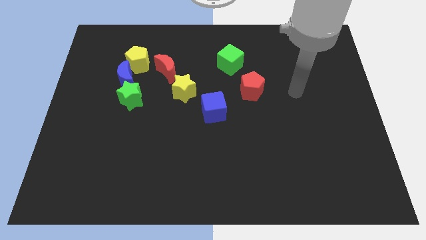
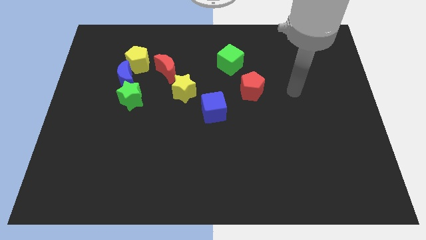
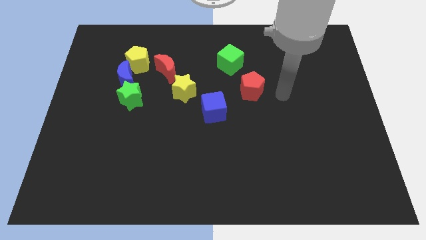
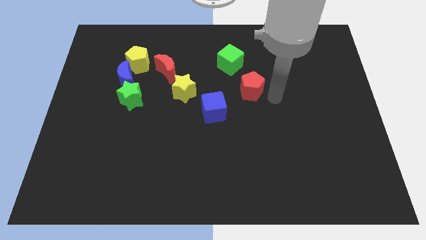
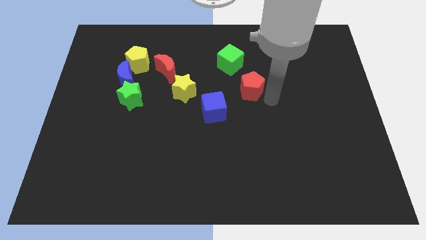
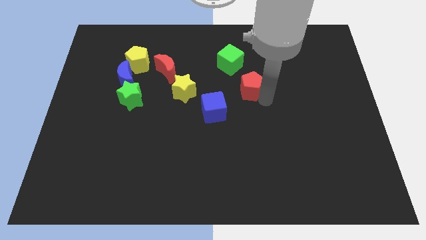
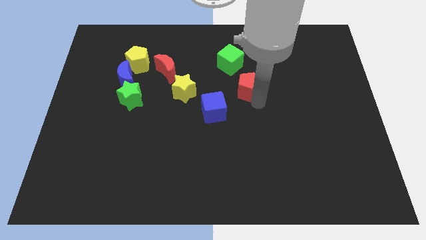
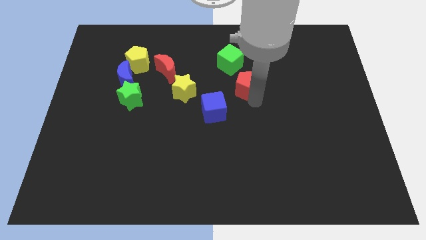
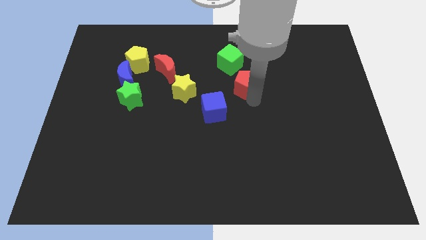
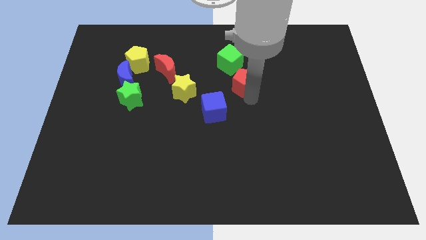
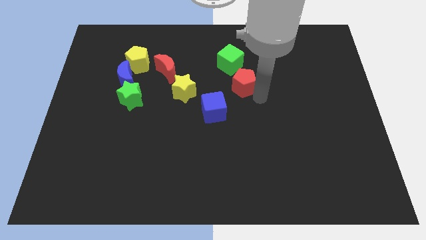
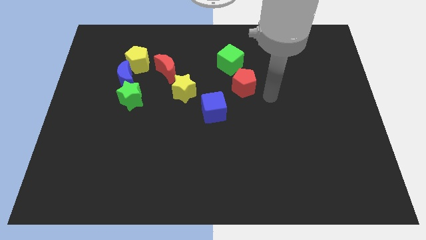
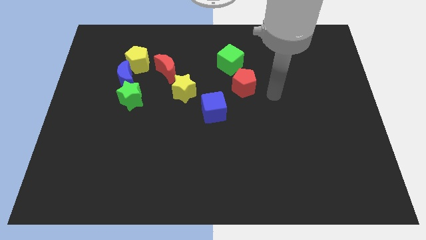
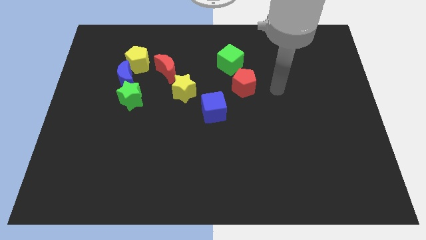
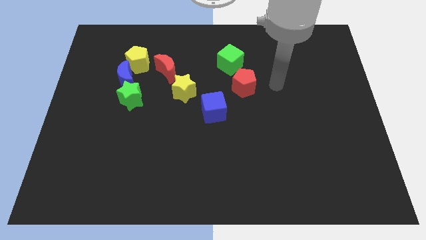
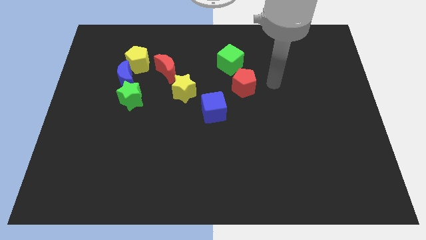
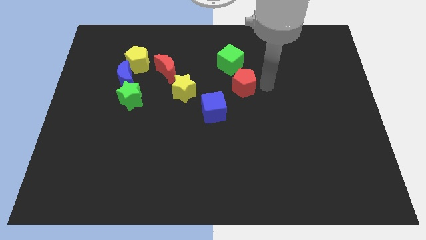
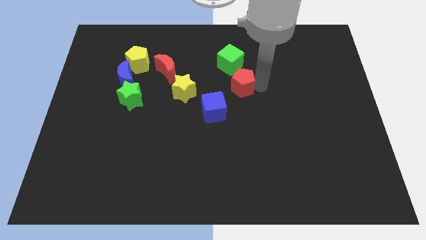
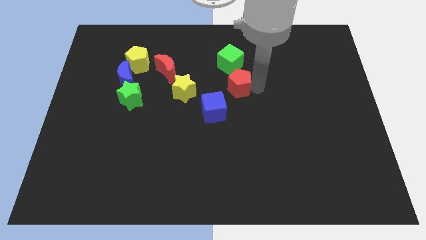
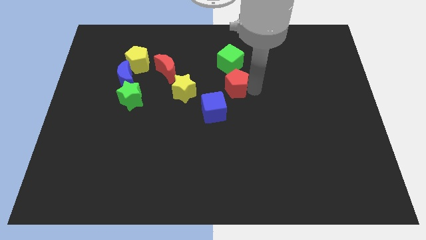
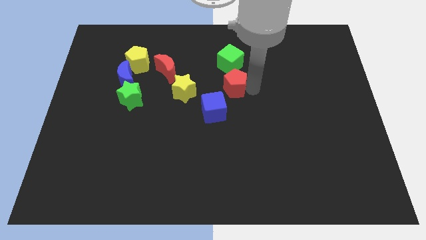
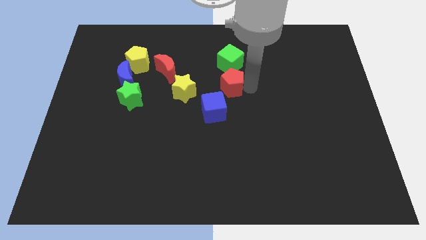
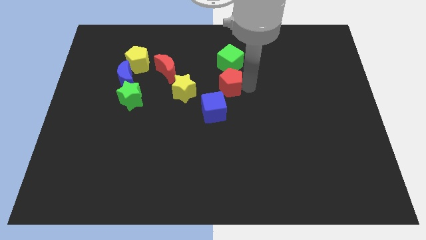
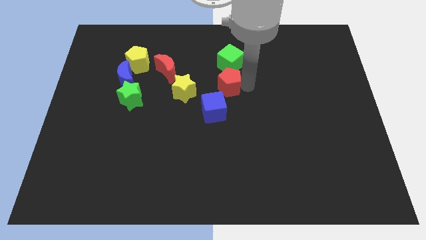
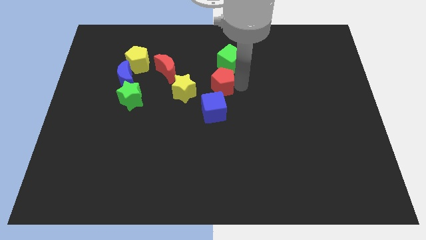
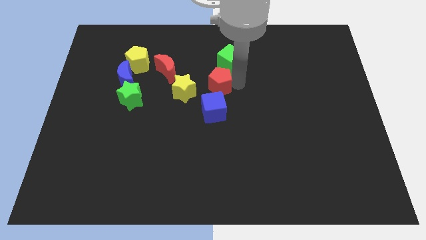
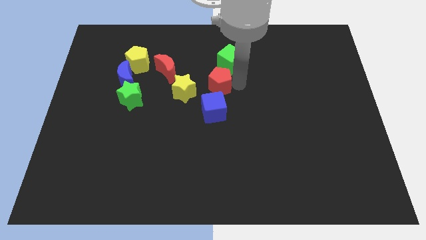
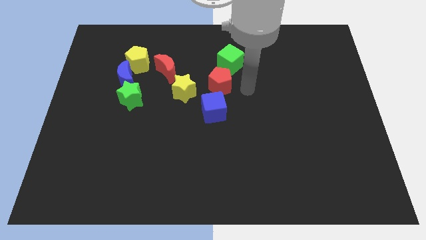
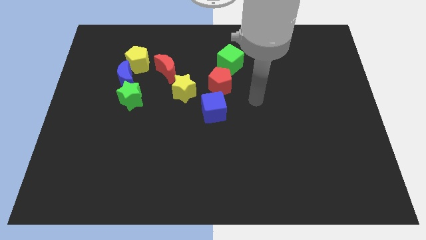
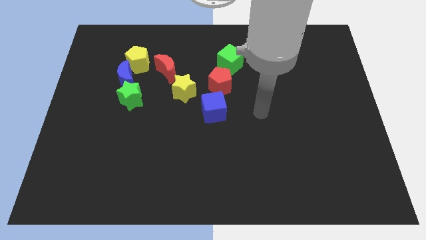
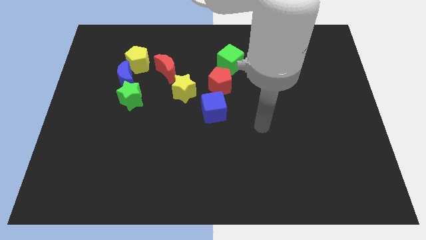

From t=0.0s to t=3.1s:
place the red pentagon between the blue cube and green cube

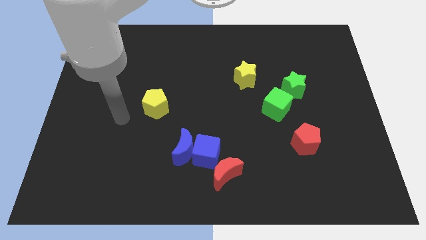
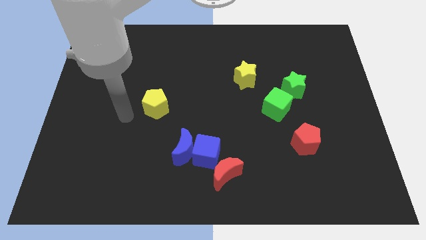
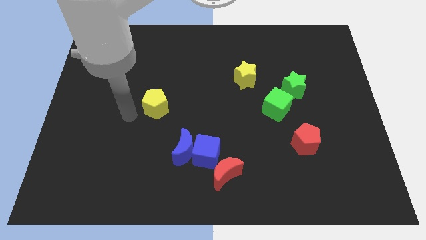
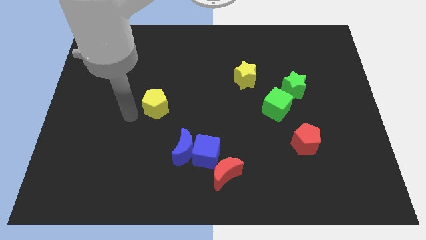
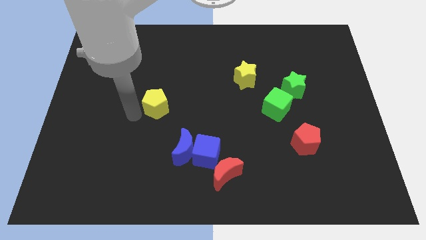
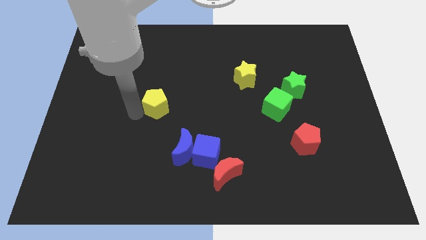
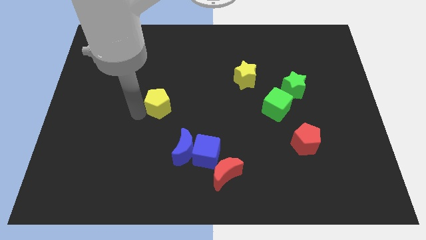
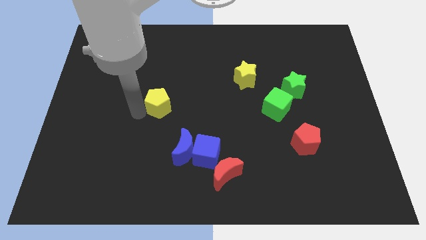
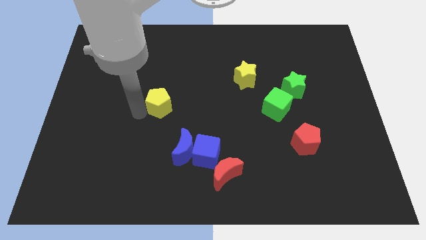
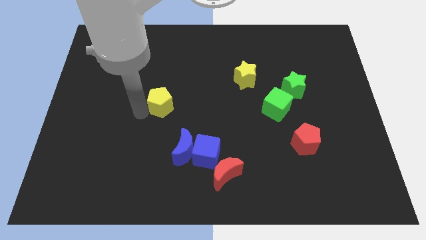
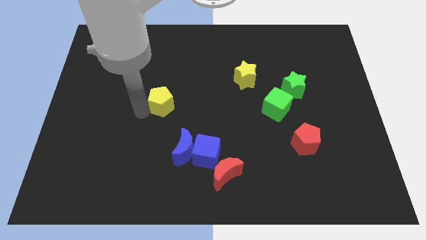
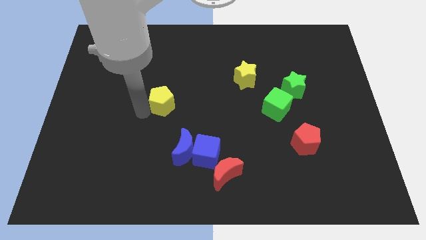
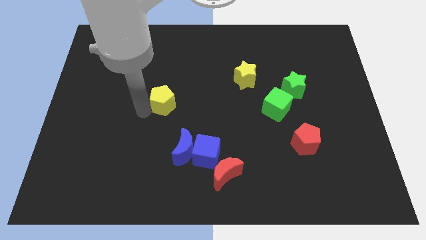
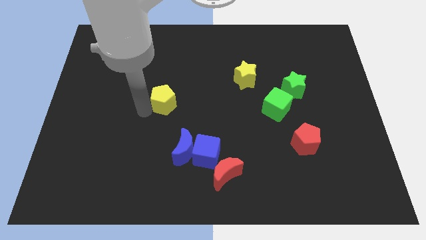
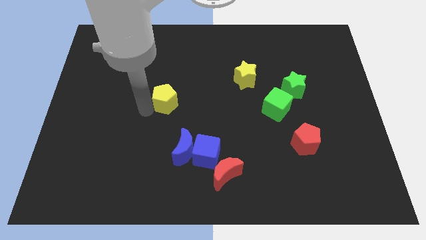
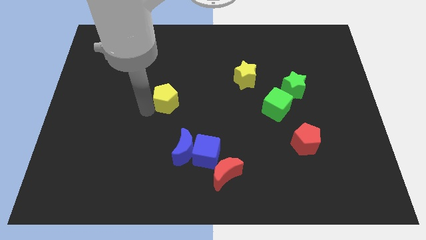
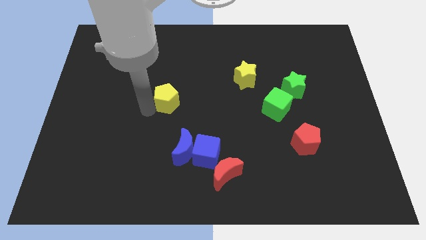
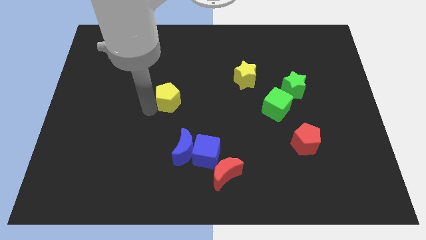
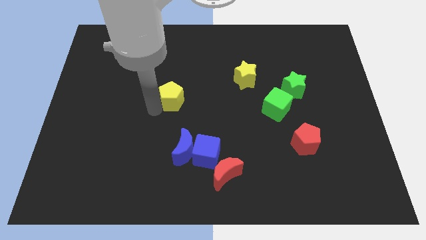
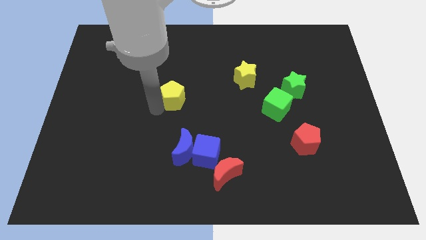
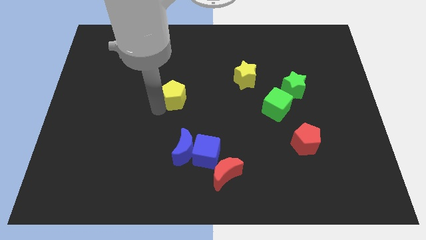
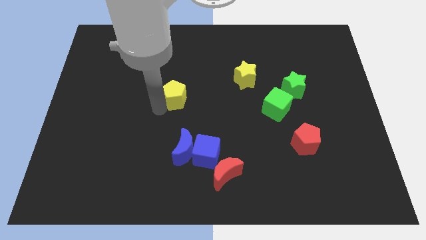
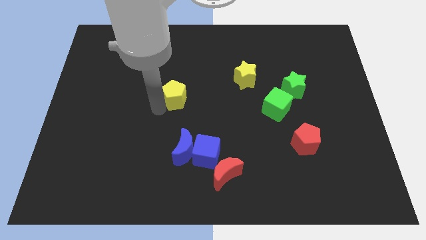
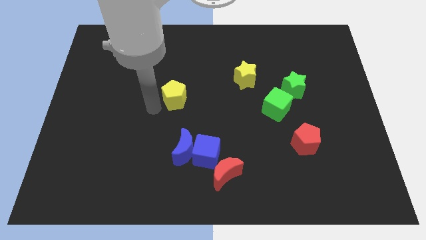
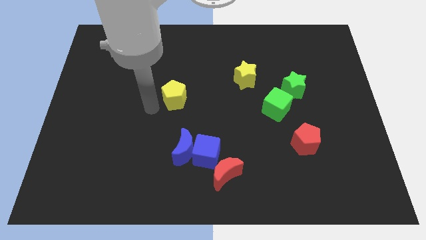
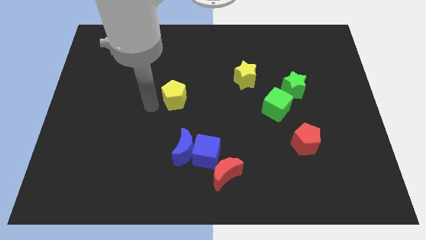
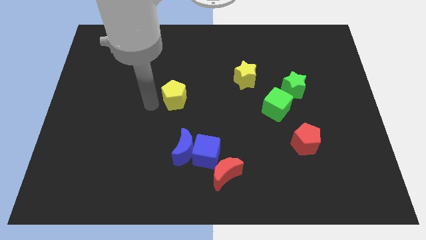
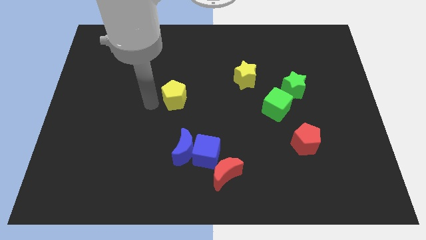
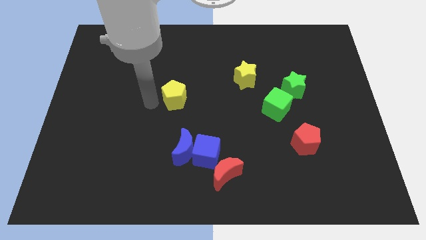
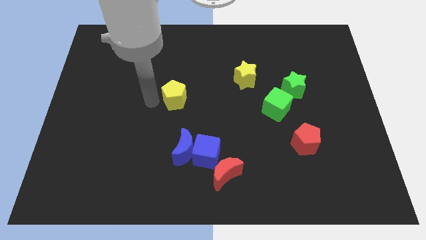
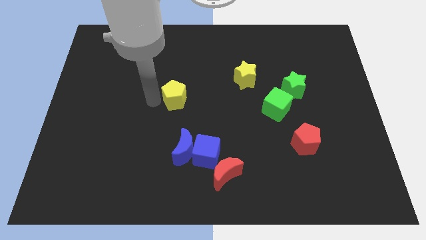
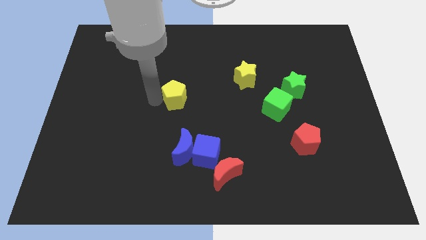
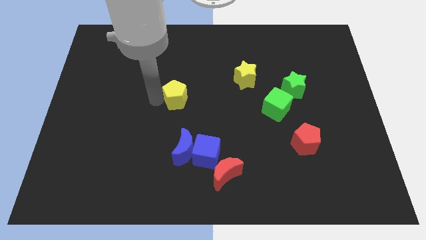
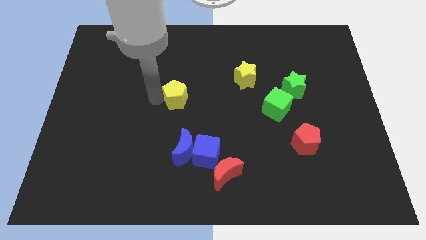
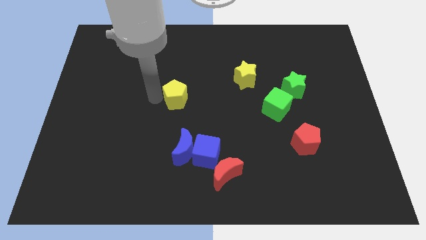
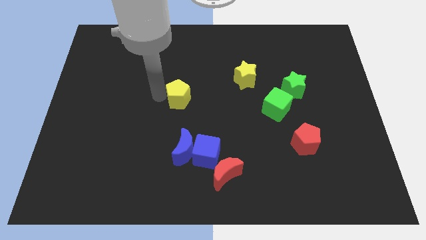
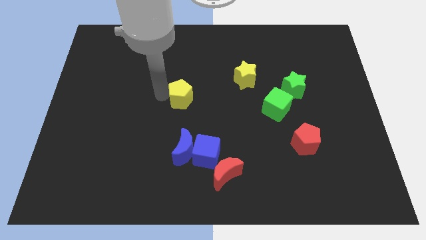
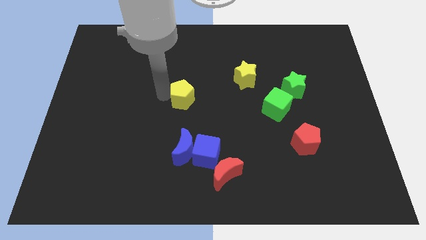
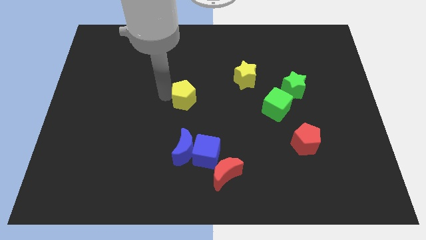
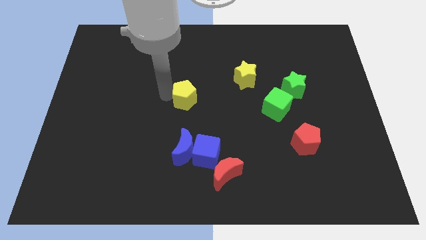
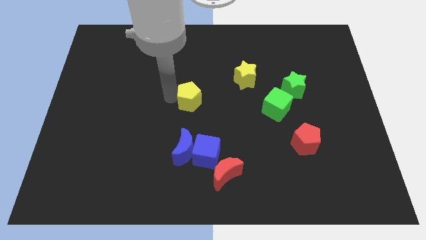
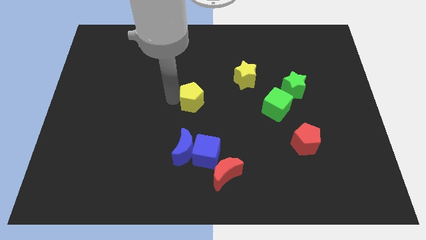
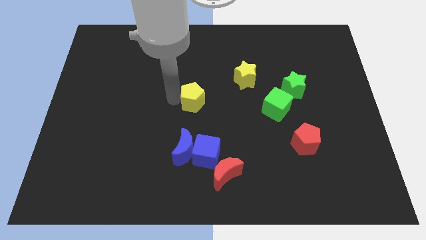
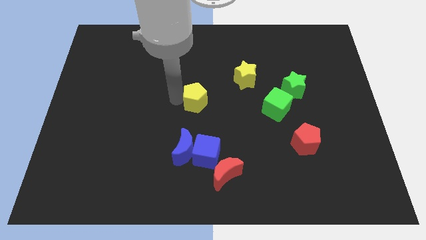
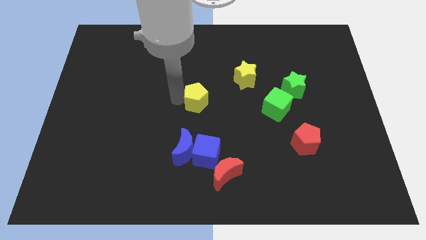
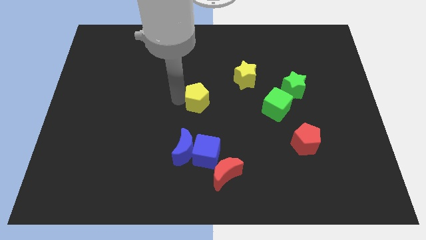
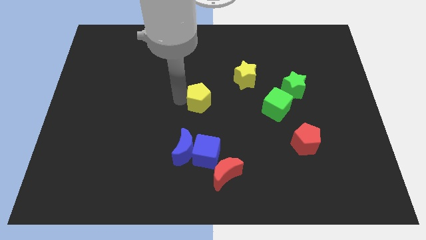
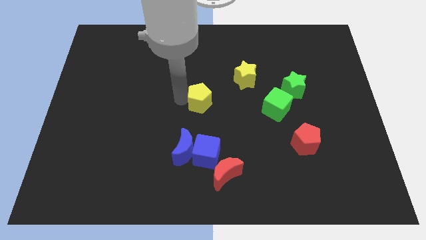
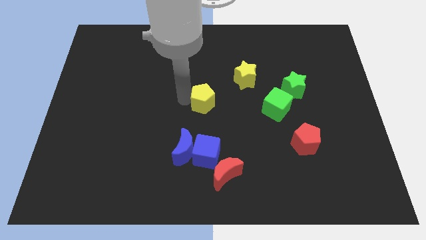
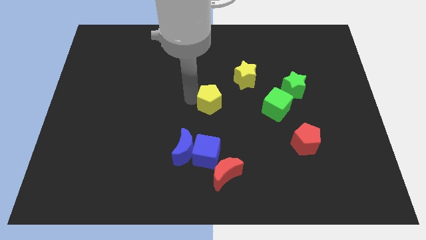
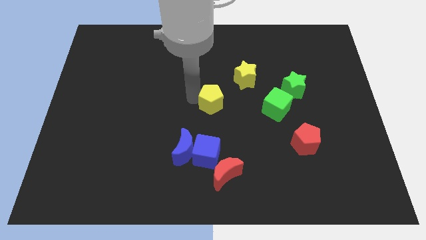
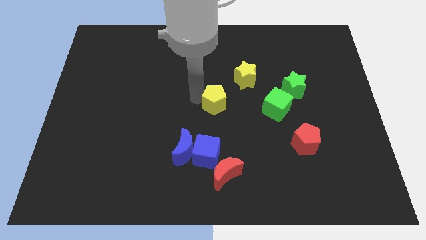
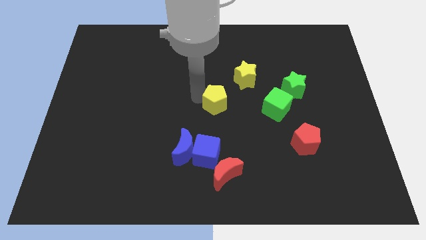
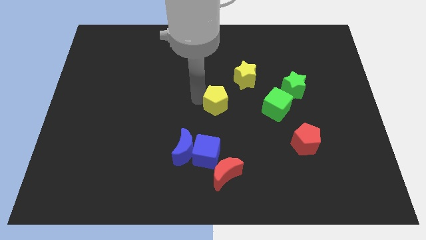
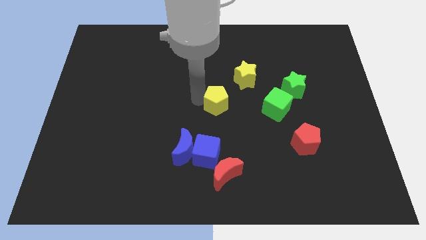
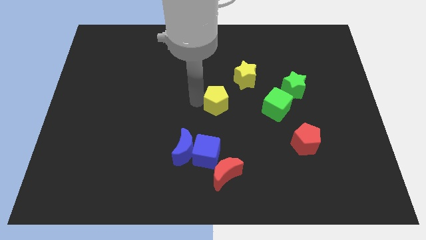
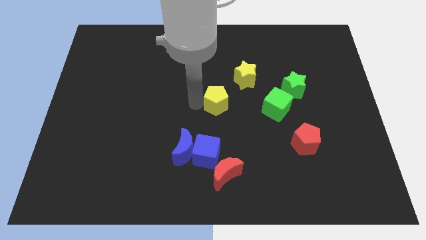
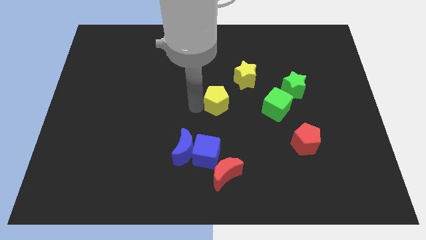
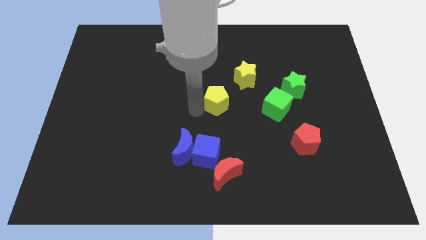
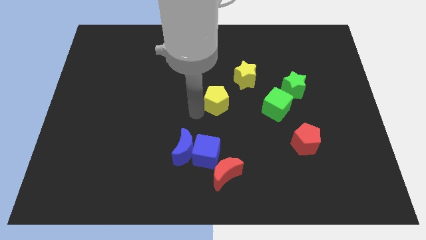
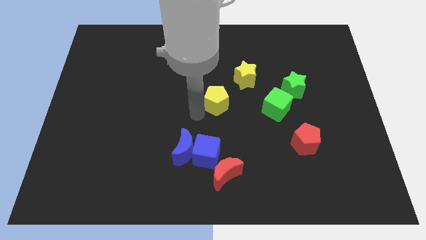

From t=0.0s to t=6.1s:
place yellow pentagon to left of green cube
